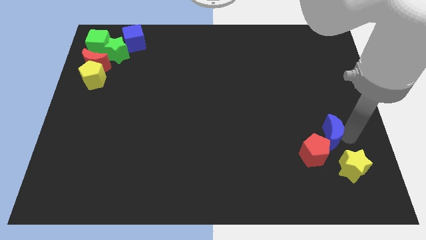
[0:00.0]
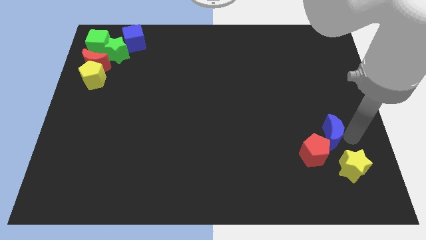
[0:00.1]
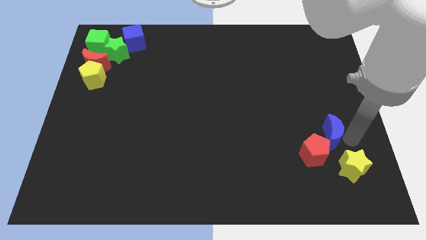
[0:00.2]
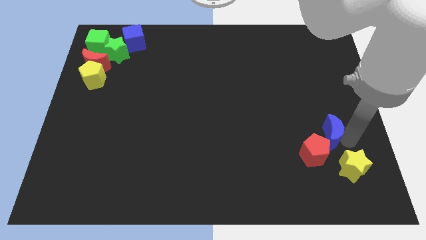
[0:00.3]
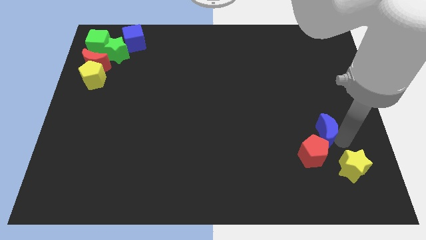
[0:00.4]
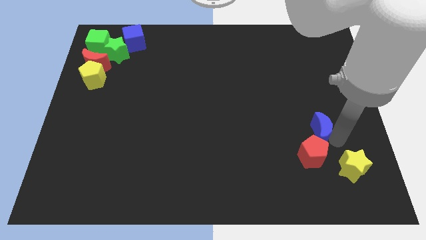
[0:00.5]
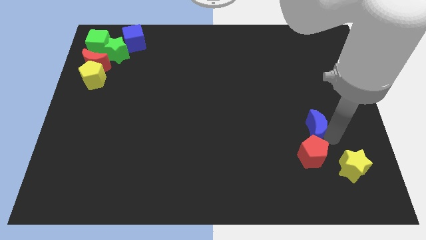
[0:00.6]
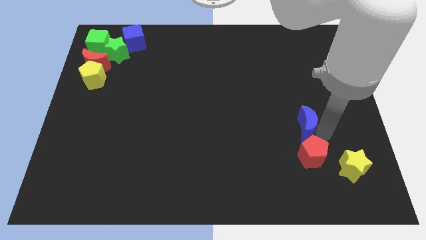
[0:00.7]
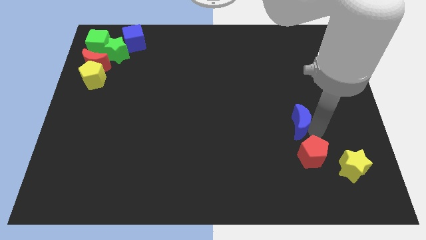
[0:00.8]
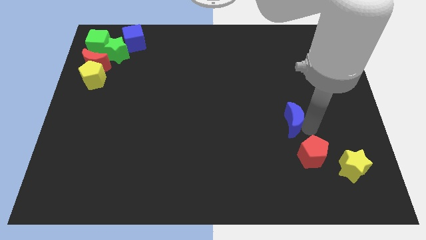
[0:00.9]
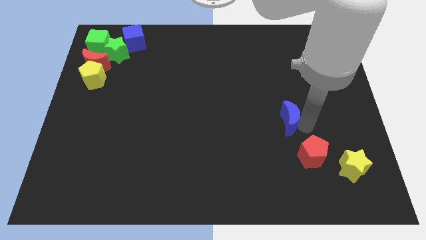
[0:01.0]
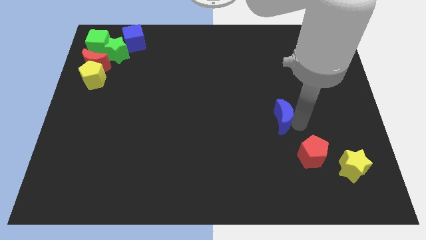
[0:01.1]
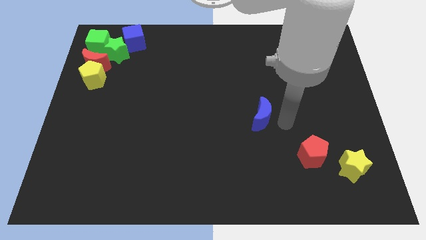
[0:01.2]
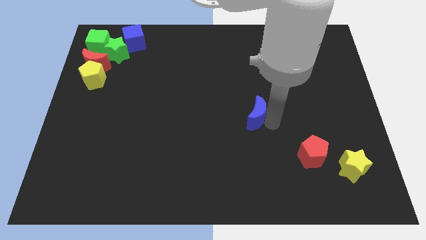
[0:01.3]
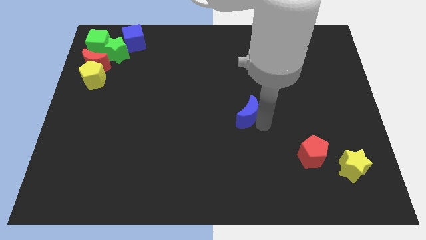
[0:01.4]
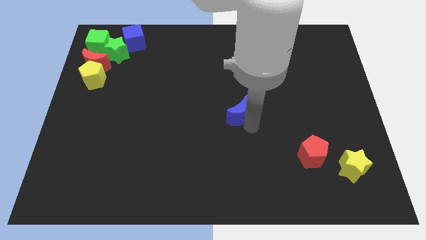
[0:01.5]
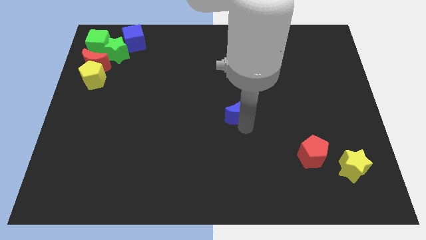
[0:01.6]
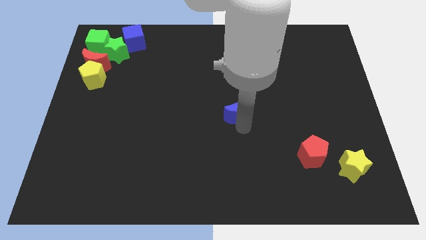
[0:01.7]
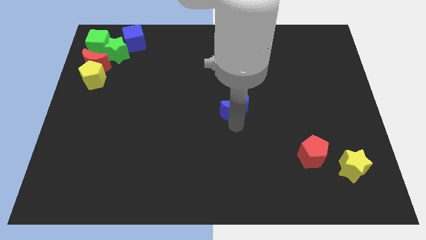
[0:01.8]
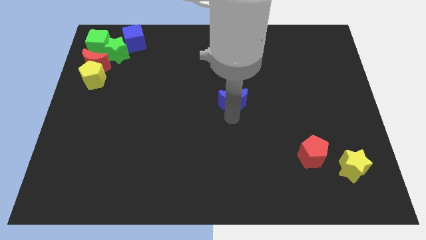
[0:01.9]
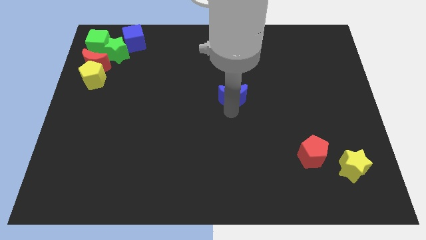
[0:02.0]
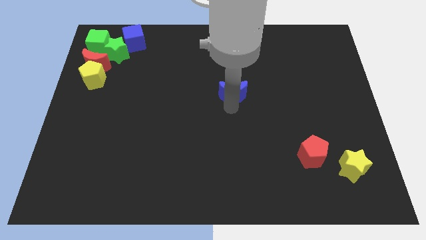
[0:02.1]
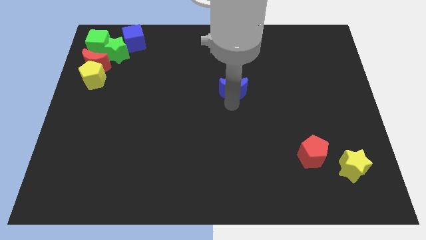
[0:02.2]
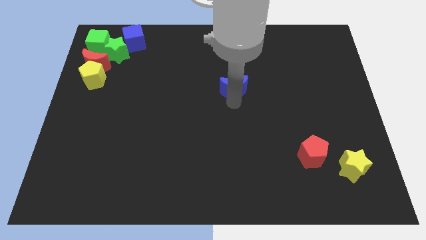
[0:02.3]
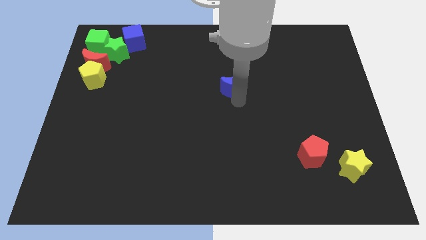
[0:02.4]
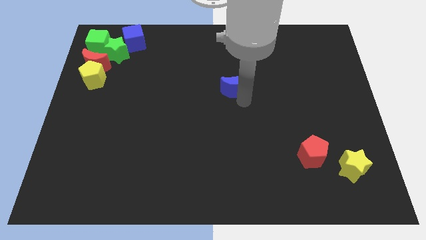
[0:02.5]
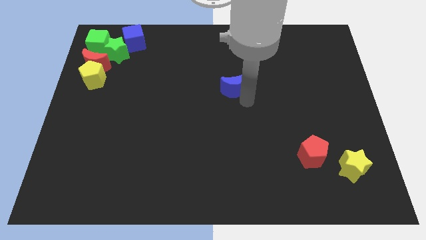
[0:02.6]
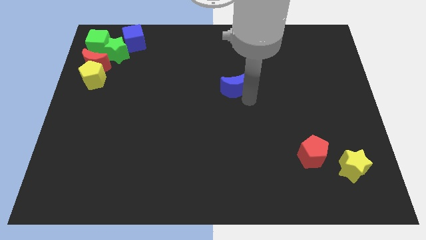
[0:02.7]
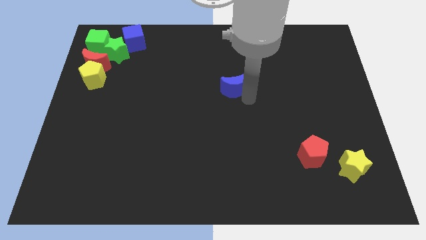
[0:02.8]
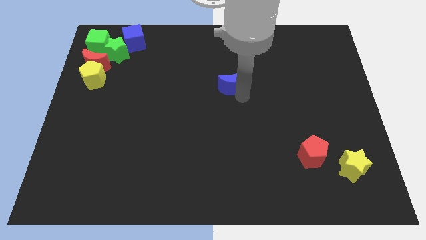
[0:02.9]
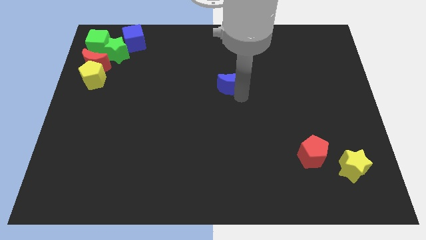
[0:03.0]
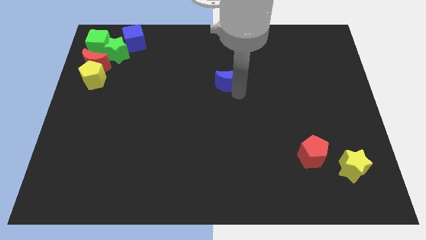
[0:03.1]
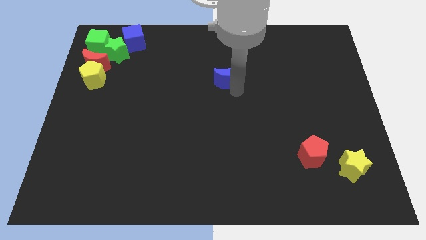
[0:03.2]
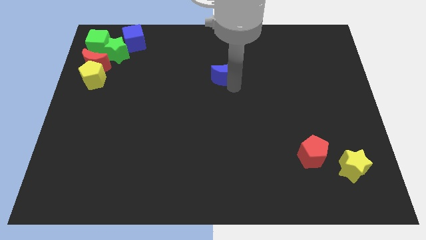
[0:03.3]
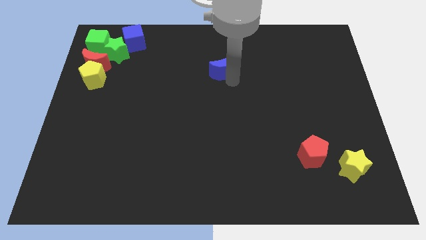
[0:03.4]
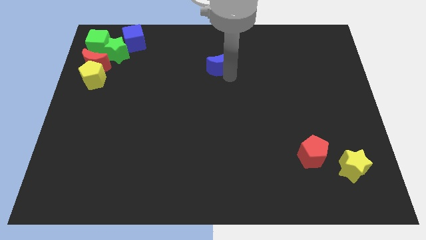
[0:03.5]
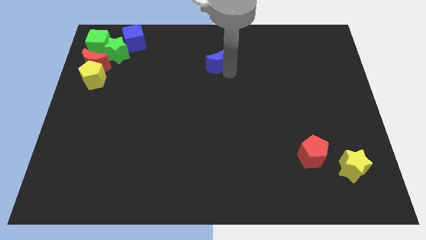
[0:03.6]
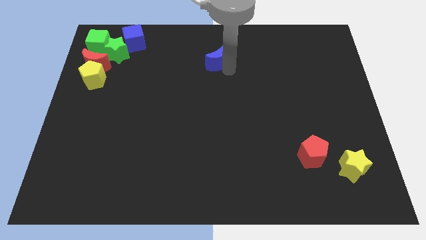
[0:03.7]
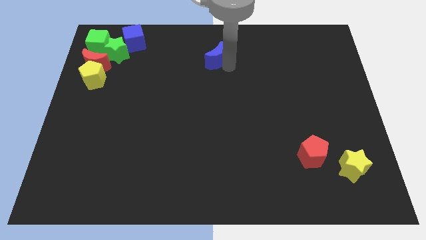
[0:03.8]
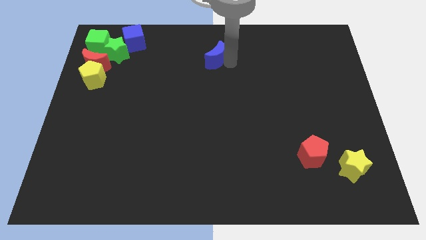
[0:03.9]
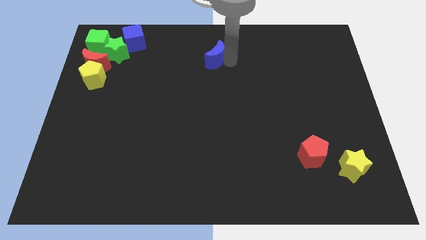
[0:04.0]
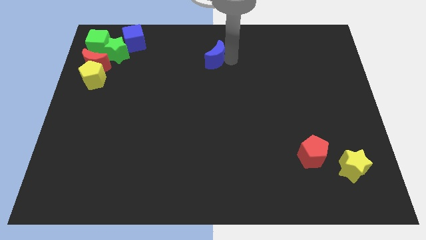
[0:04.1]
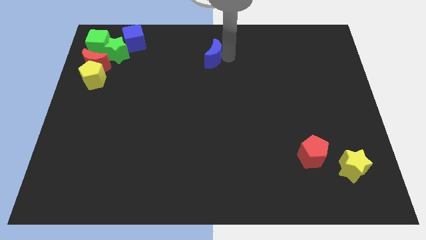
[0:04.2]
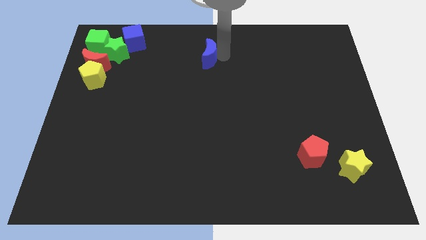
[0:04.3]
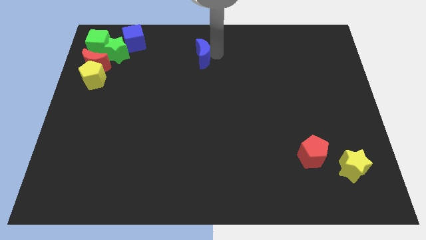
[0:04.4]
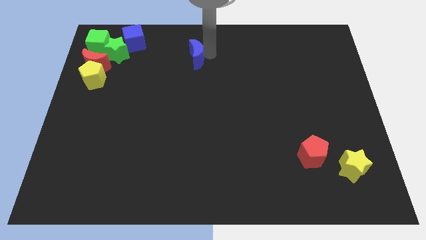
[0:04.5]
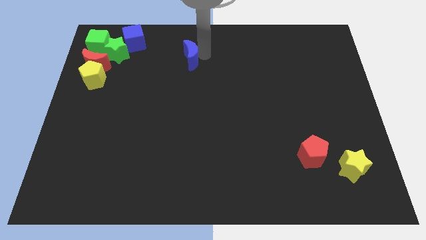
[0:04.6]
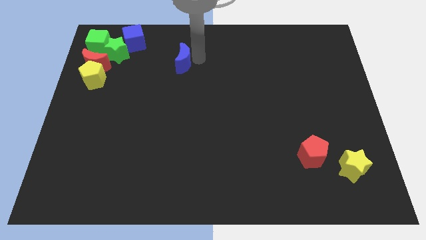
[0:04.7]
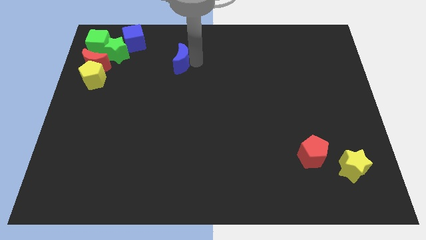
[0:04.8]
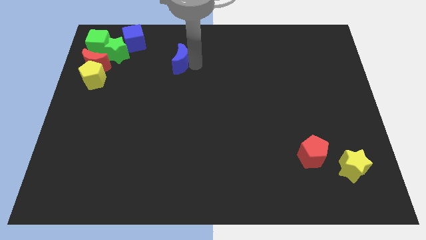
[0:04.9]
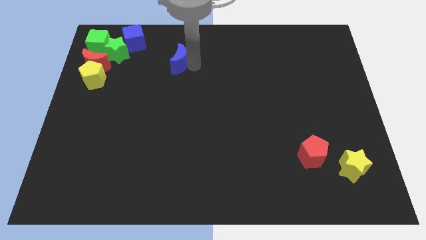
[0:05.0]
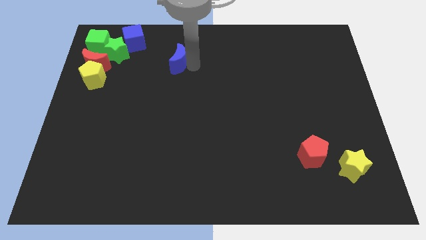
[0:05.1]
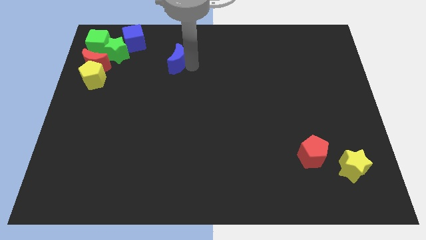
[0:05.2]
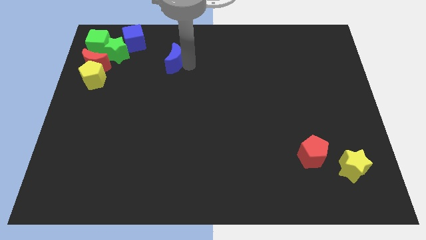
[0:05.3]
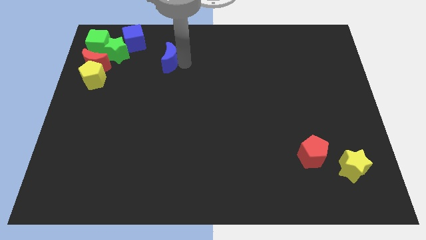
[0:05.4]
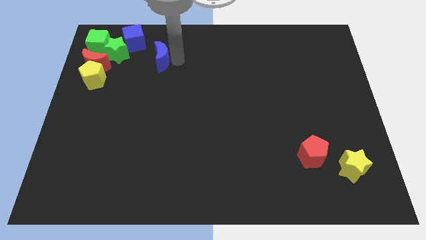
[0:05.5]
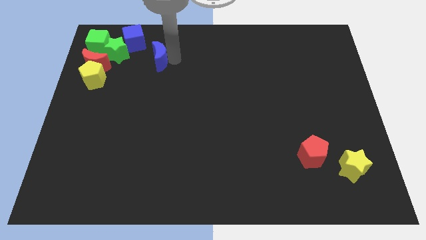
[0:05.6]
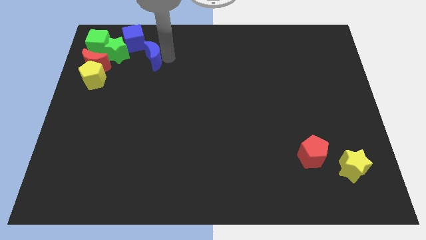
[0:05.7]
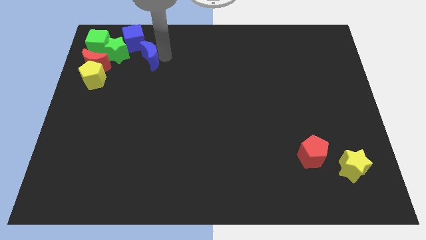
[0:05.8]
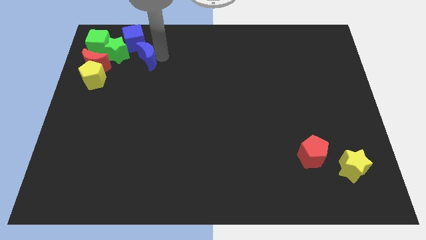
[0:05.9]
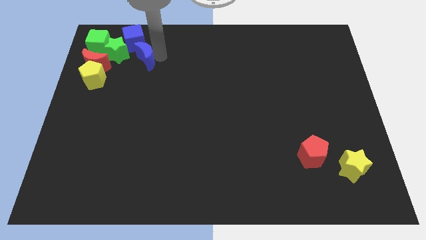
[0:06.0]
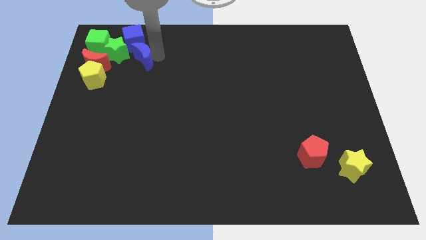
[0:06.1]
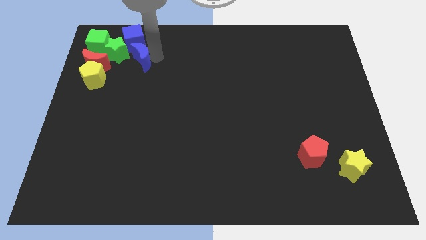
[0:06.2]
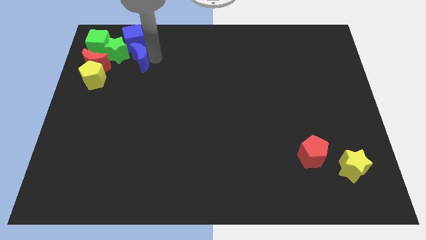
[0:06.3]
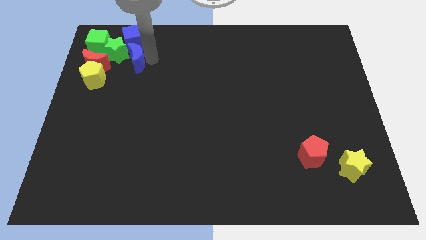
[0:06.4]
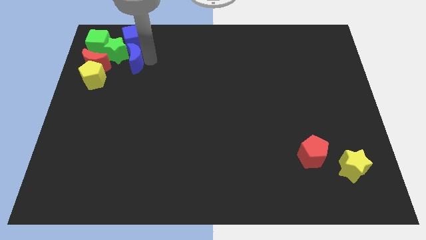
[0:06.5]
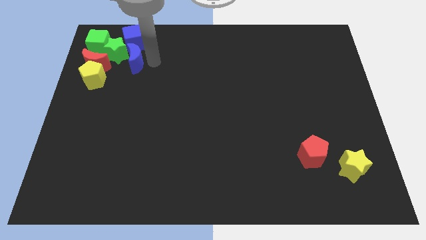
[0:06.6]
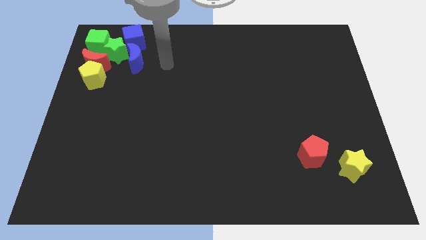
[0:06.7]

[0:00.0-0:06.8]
push the blue moon to the right of green star

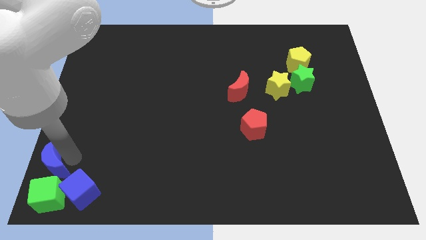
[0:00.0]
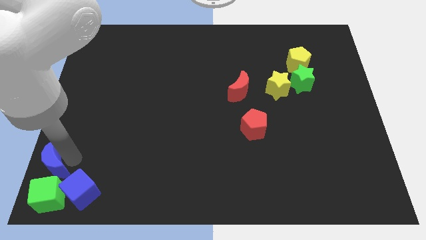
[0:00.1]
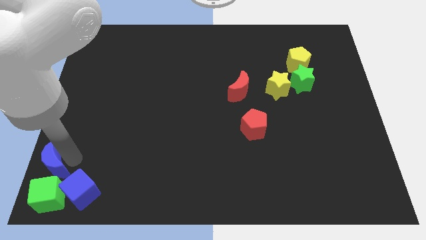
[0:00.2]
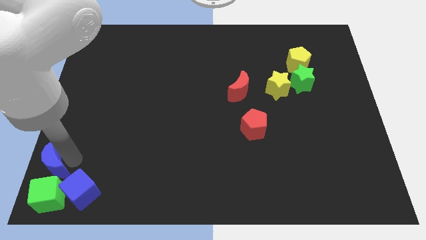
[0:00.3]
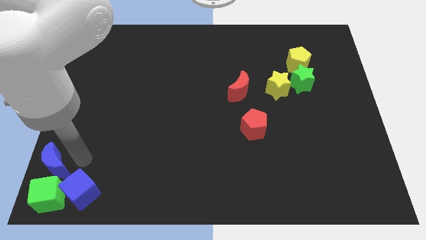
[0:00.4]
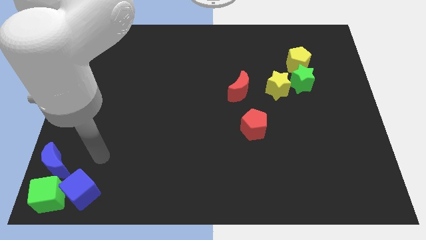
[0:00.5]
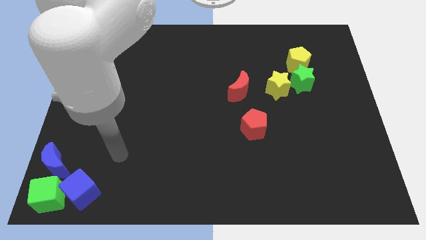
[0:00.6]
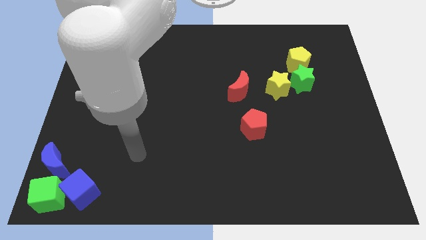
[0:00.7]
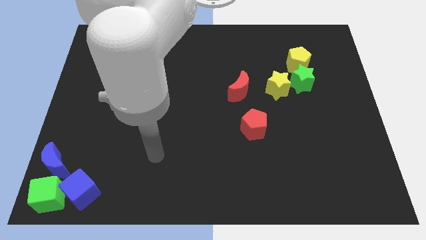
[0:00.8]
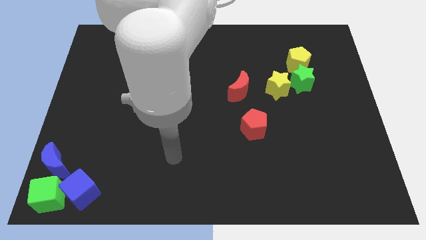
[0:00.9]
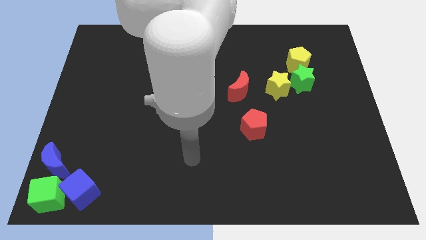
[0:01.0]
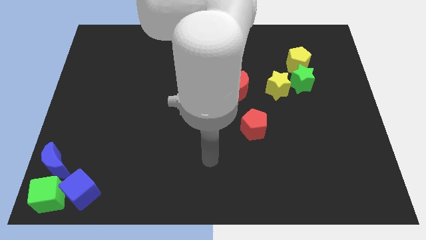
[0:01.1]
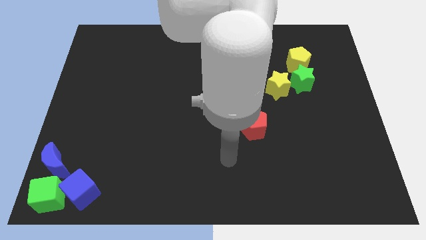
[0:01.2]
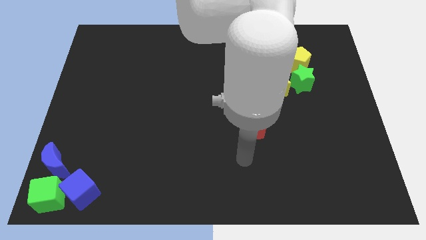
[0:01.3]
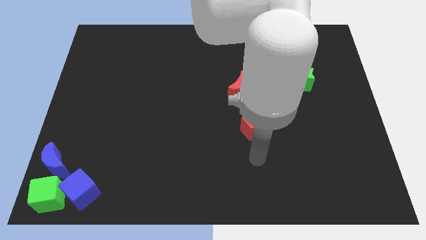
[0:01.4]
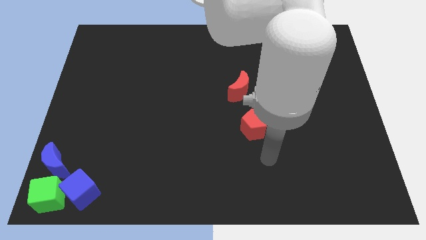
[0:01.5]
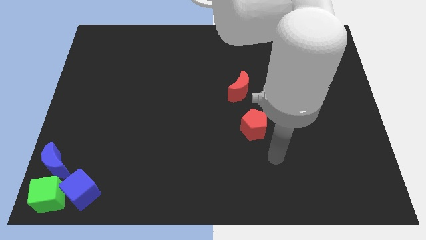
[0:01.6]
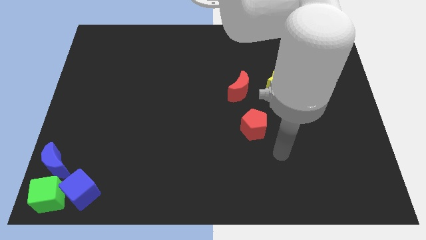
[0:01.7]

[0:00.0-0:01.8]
move your arm away from the blue crescent

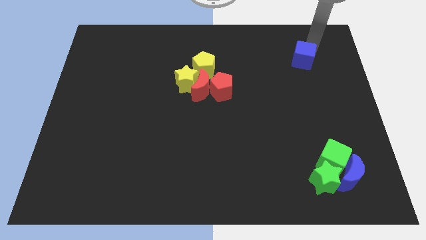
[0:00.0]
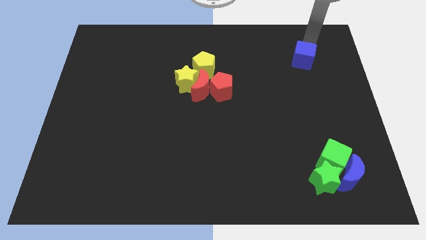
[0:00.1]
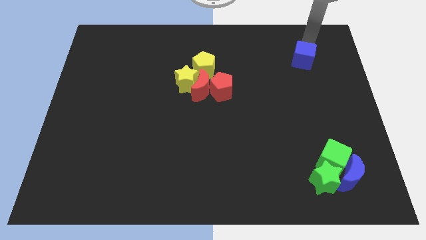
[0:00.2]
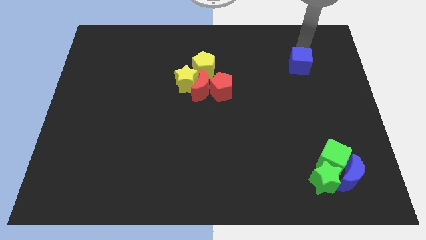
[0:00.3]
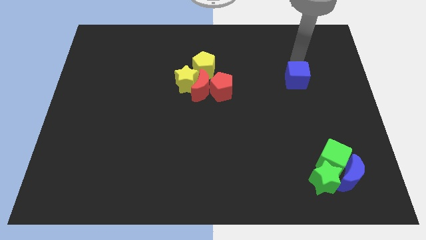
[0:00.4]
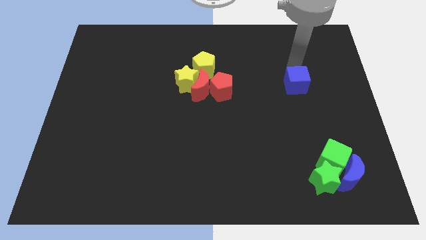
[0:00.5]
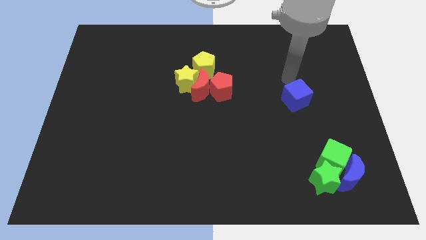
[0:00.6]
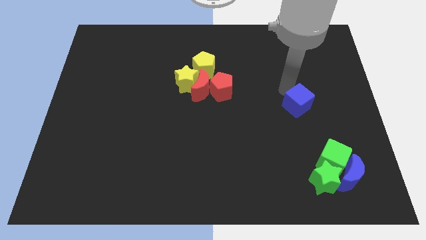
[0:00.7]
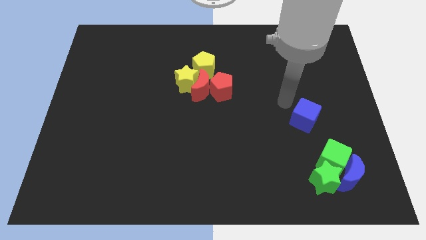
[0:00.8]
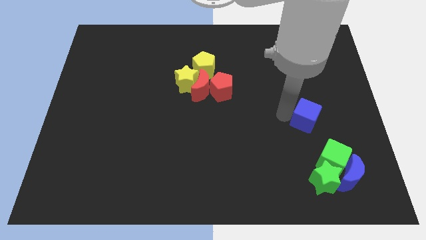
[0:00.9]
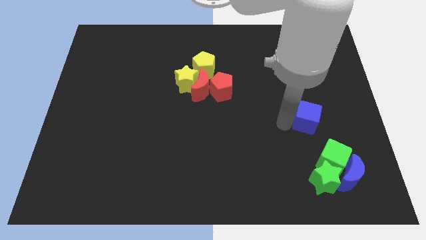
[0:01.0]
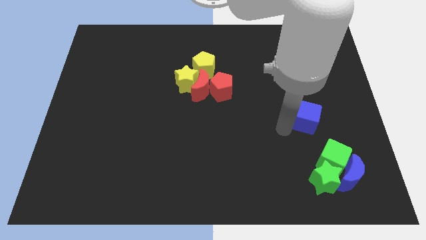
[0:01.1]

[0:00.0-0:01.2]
push blue cube slightly forward
